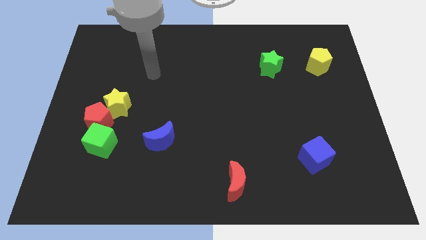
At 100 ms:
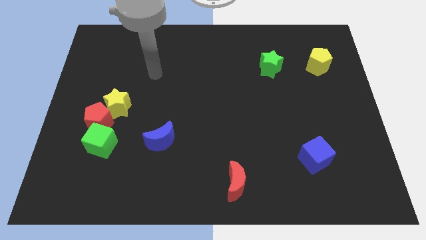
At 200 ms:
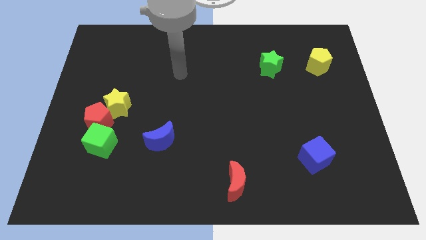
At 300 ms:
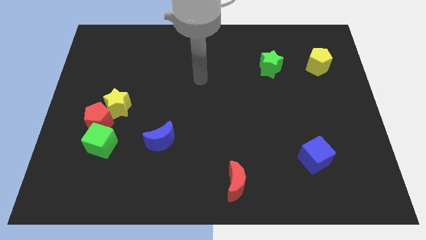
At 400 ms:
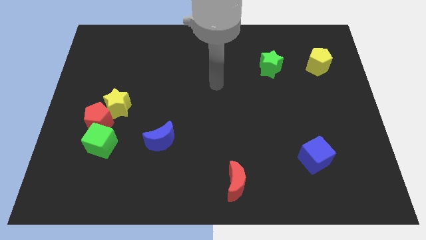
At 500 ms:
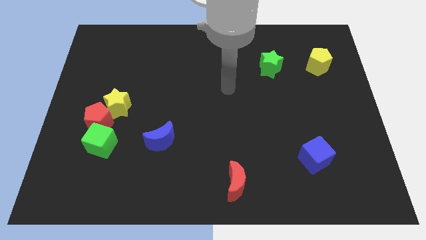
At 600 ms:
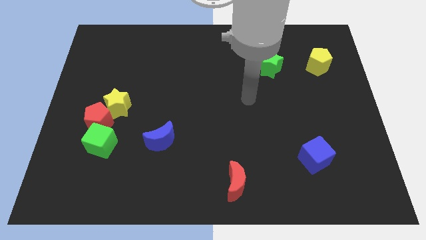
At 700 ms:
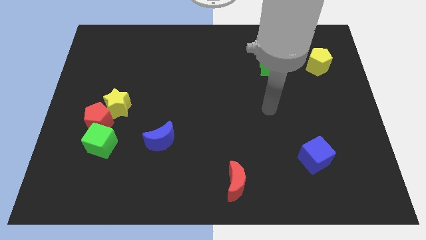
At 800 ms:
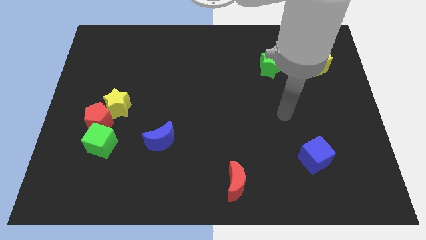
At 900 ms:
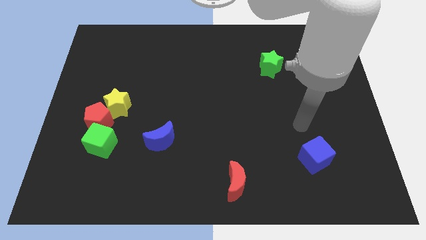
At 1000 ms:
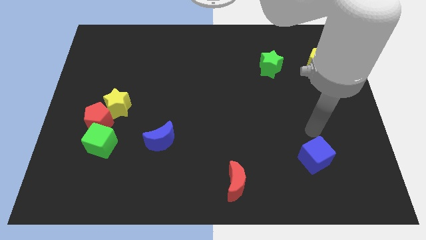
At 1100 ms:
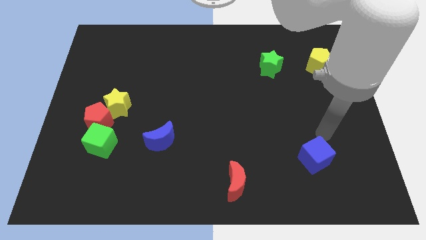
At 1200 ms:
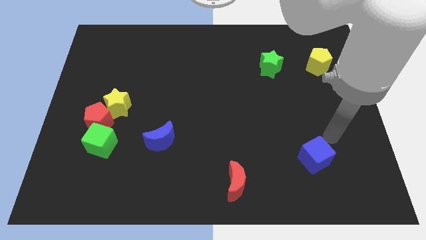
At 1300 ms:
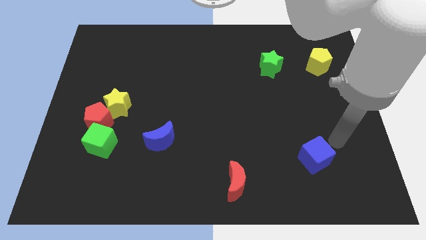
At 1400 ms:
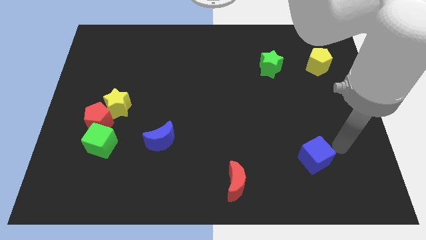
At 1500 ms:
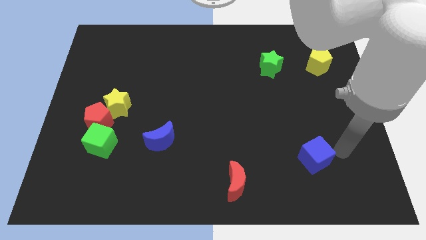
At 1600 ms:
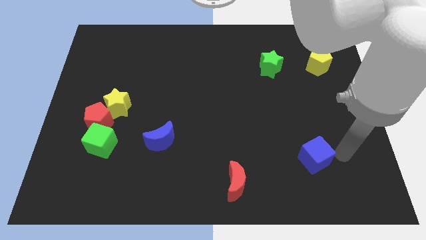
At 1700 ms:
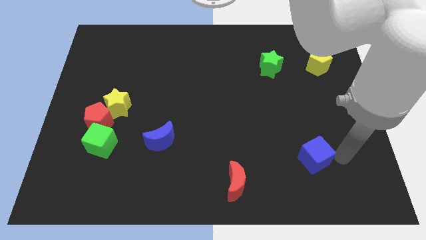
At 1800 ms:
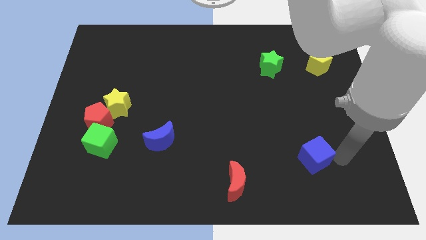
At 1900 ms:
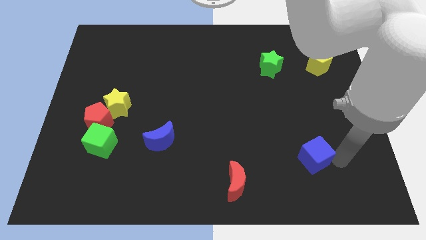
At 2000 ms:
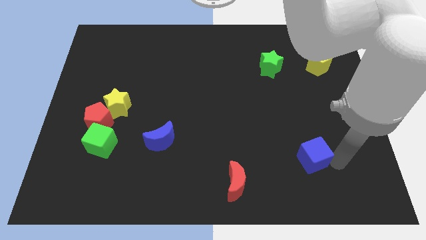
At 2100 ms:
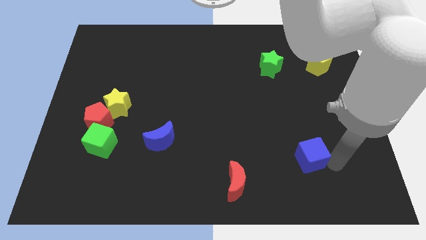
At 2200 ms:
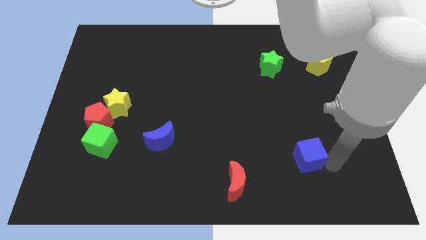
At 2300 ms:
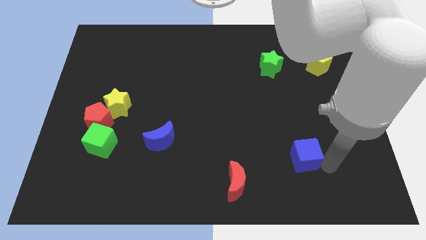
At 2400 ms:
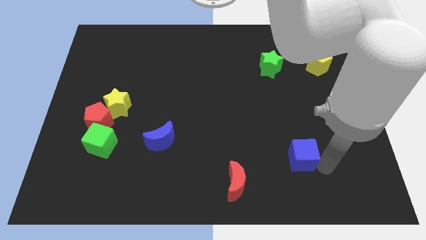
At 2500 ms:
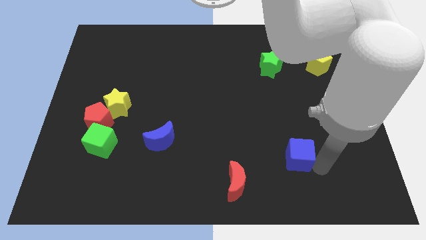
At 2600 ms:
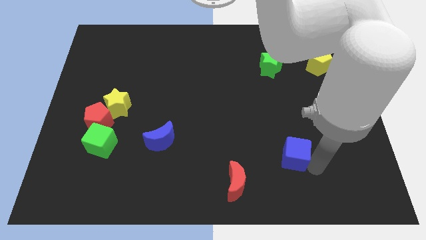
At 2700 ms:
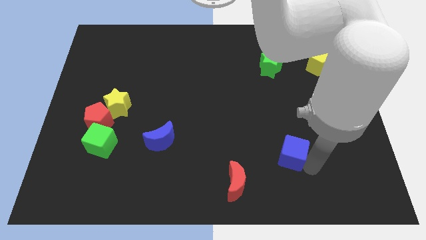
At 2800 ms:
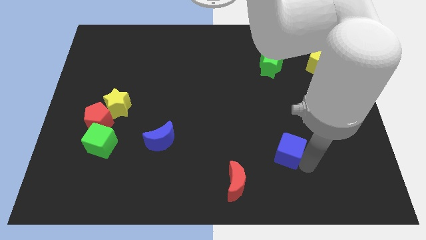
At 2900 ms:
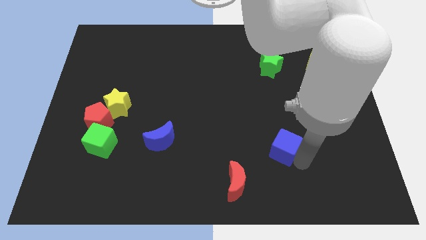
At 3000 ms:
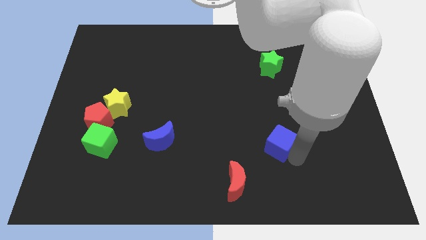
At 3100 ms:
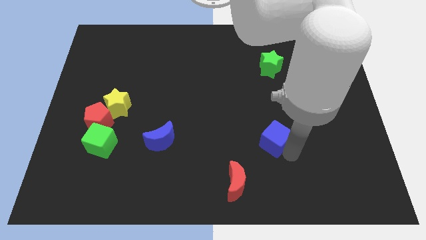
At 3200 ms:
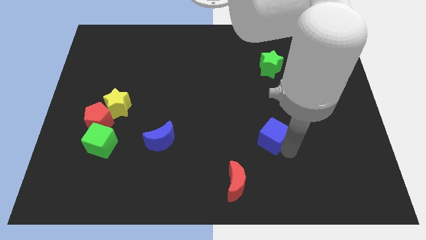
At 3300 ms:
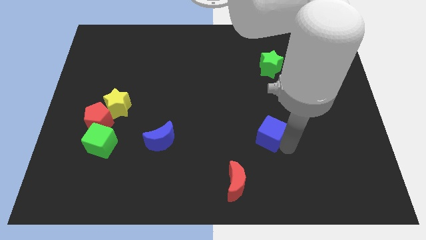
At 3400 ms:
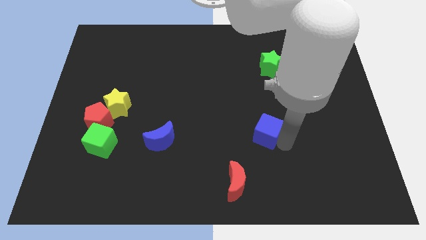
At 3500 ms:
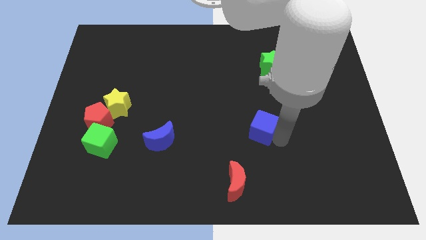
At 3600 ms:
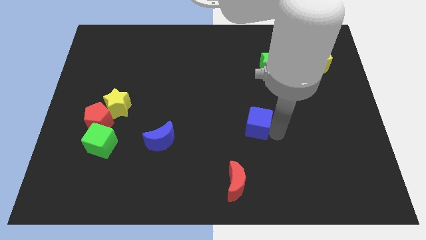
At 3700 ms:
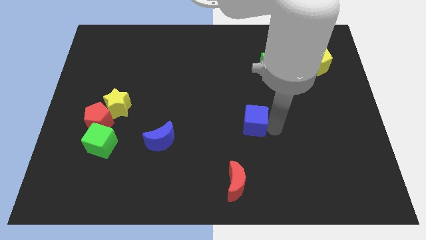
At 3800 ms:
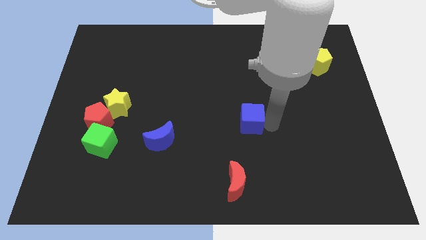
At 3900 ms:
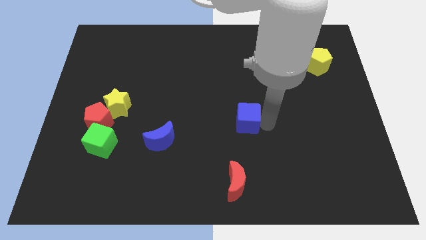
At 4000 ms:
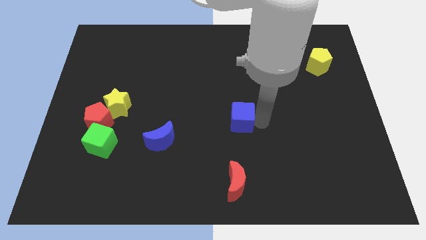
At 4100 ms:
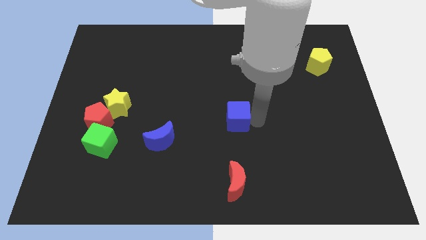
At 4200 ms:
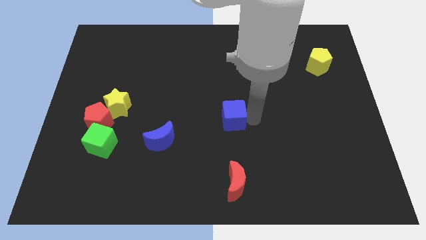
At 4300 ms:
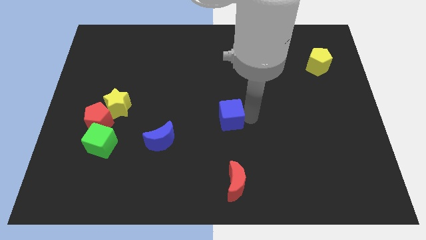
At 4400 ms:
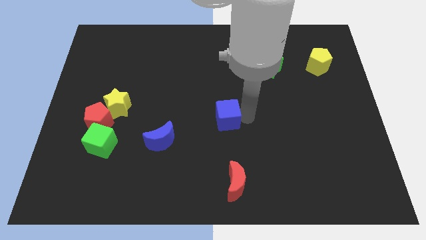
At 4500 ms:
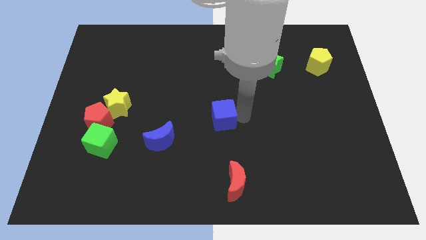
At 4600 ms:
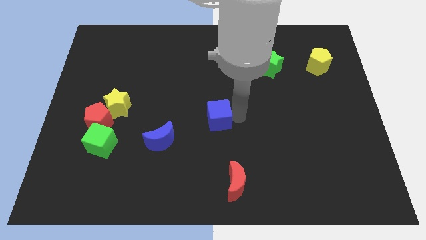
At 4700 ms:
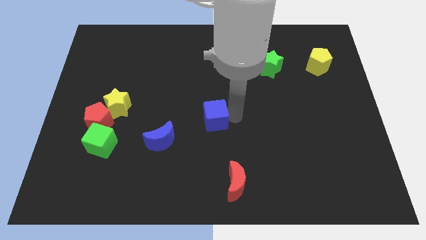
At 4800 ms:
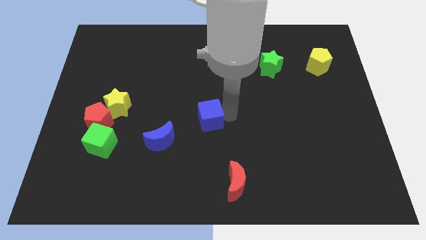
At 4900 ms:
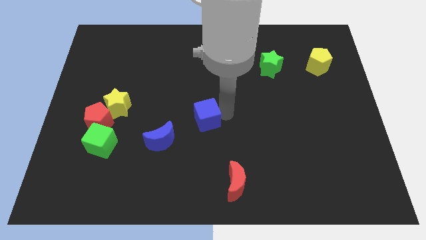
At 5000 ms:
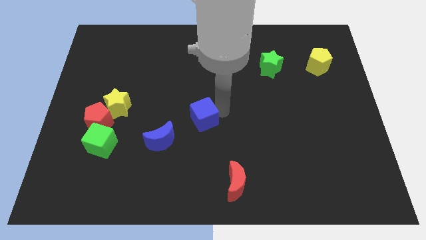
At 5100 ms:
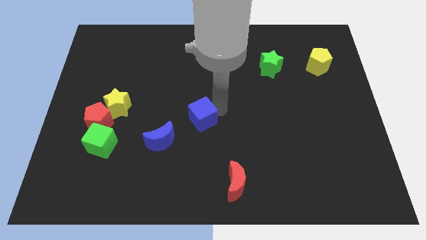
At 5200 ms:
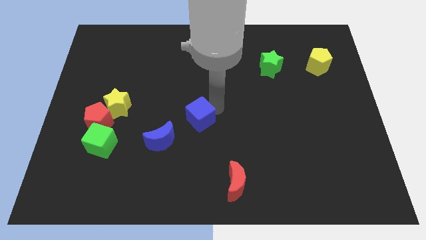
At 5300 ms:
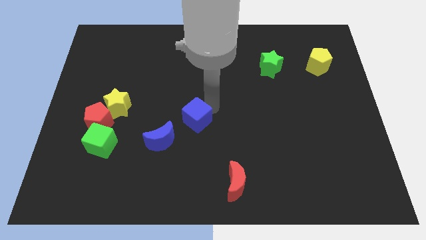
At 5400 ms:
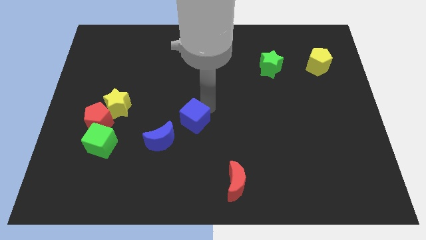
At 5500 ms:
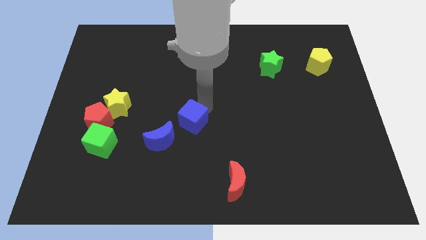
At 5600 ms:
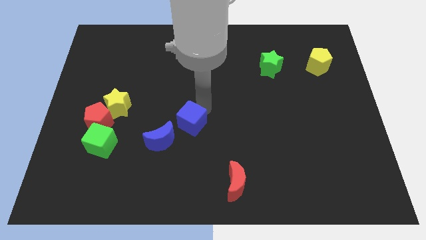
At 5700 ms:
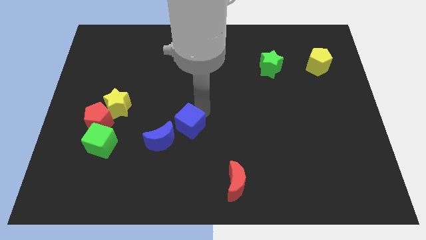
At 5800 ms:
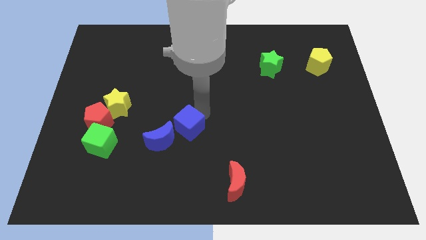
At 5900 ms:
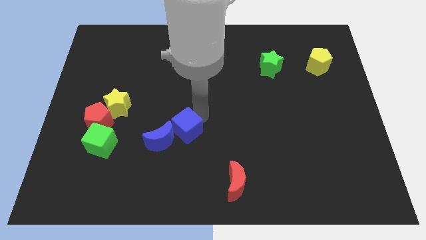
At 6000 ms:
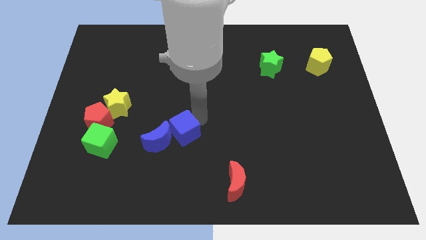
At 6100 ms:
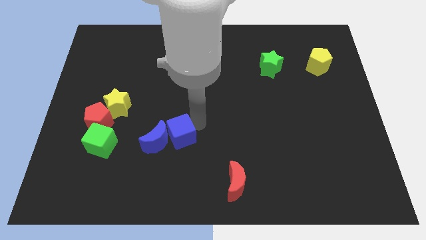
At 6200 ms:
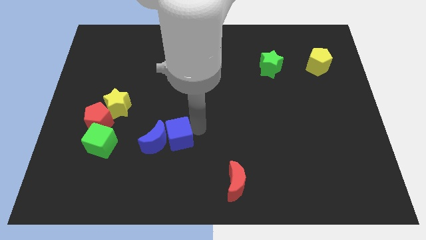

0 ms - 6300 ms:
push the blue cube to the blue moon

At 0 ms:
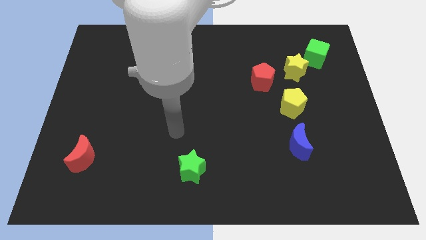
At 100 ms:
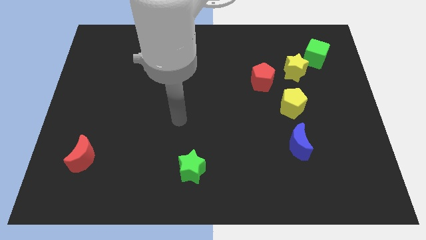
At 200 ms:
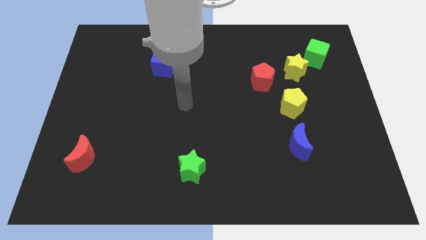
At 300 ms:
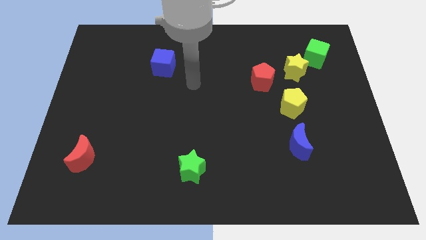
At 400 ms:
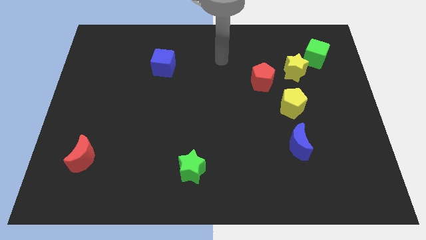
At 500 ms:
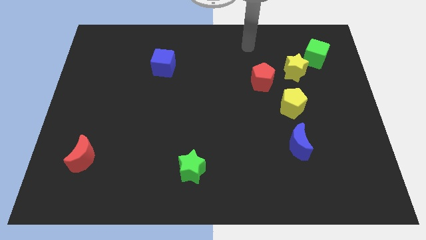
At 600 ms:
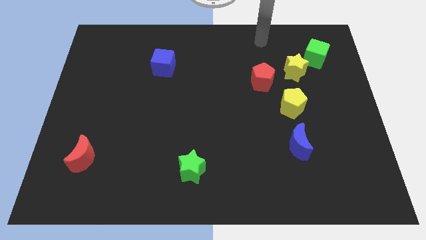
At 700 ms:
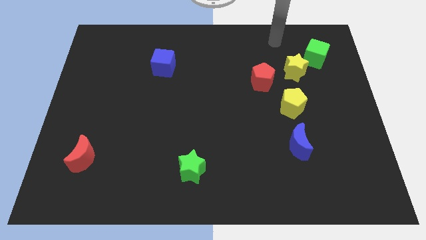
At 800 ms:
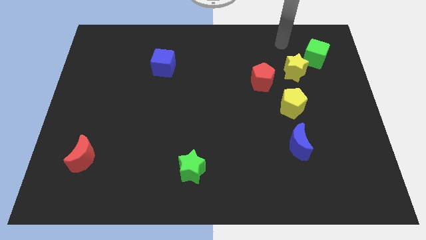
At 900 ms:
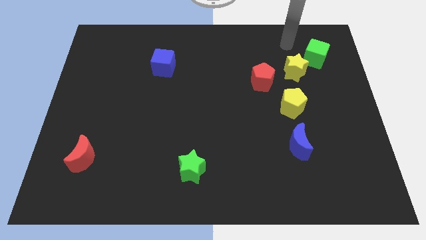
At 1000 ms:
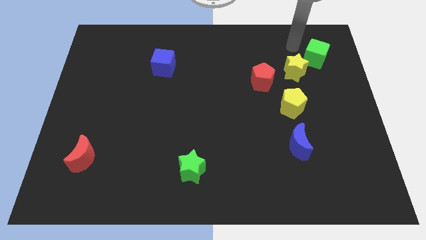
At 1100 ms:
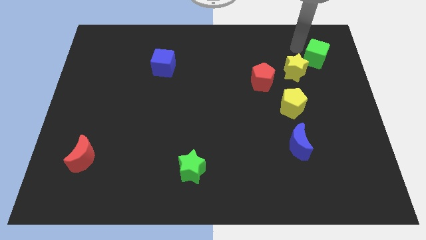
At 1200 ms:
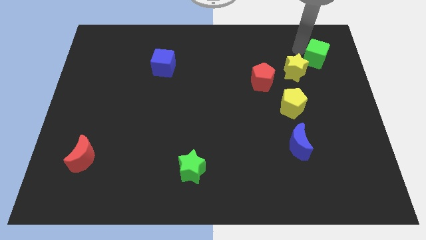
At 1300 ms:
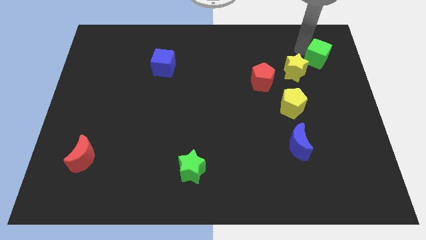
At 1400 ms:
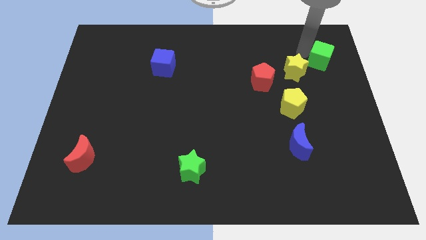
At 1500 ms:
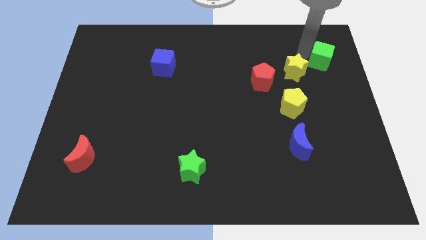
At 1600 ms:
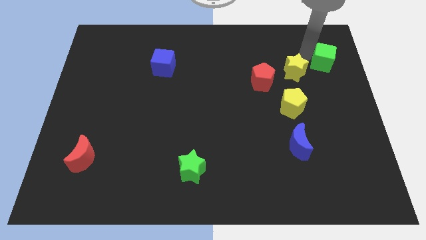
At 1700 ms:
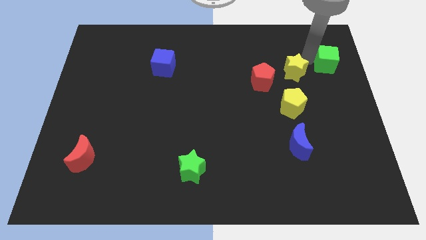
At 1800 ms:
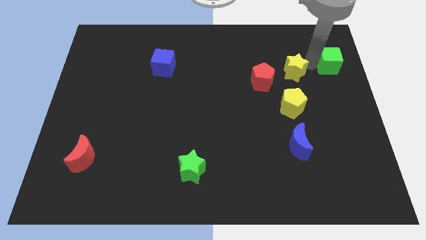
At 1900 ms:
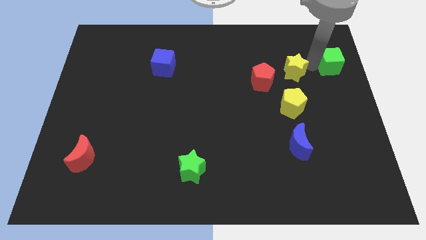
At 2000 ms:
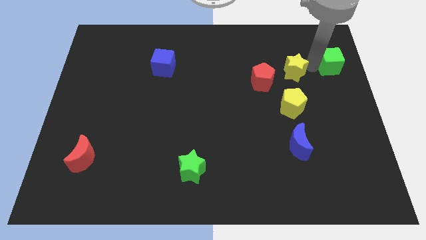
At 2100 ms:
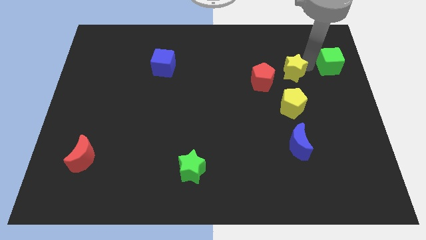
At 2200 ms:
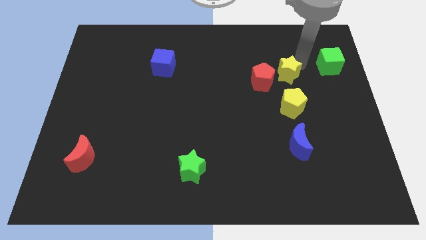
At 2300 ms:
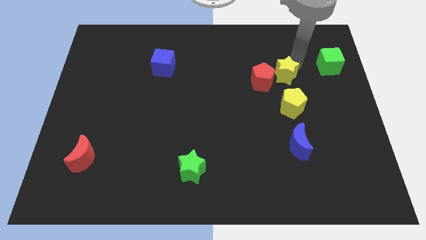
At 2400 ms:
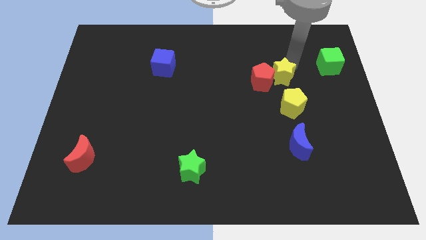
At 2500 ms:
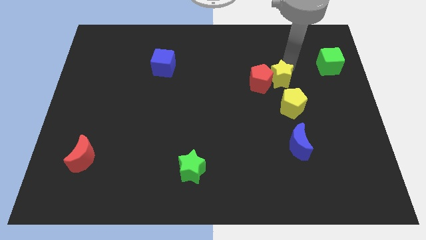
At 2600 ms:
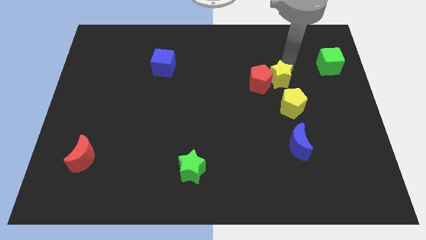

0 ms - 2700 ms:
put the yellow star to the red pentagon
